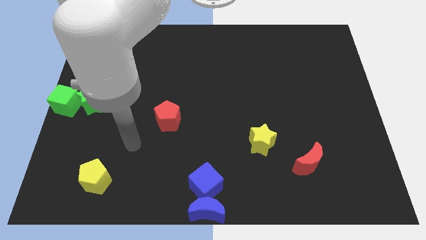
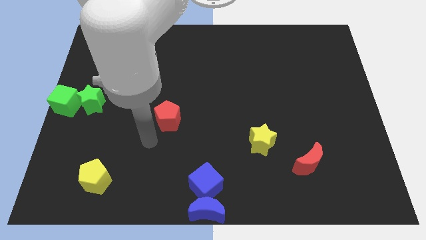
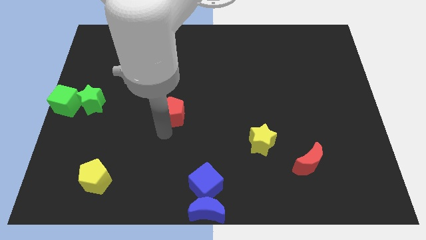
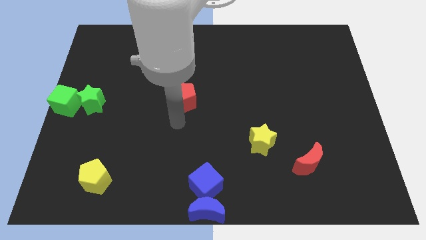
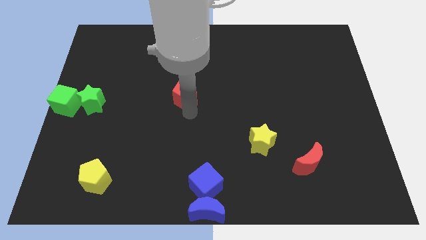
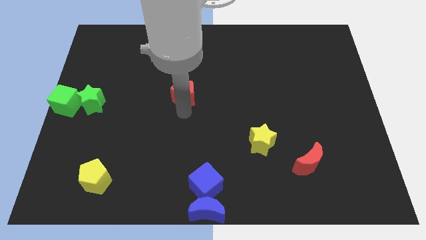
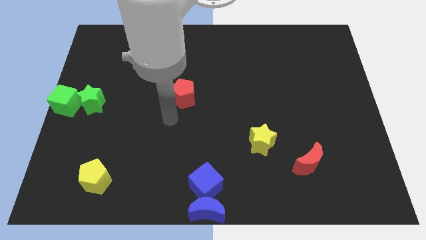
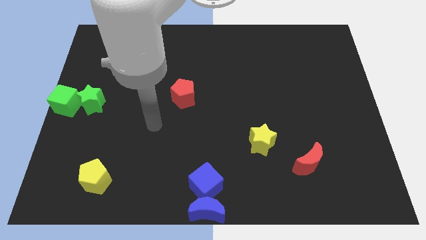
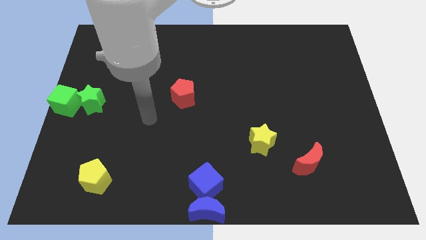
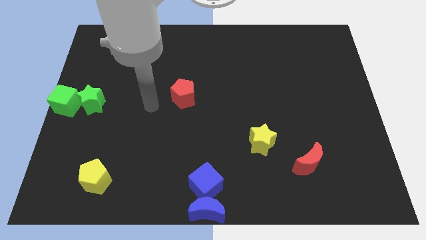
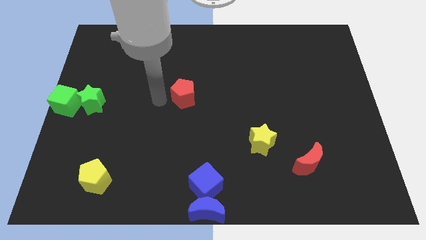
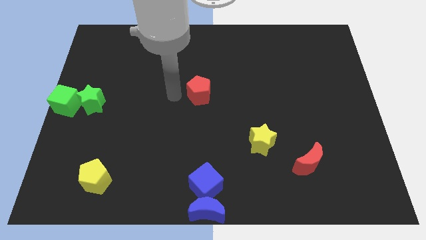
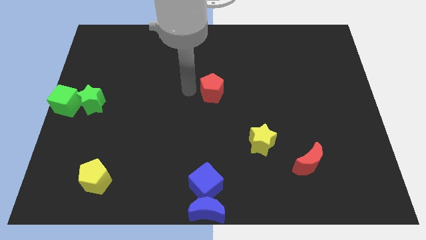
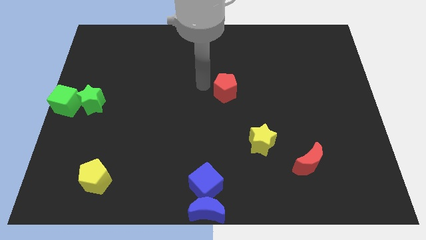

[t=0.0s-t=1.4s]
move the red pentagon to the center of the board

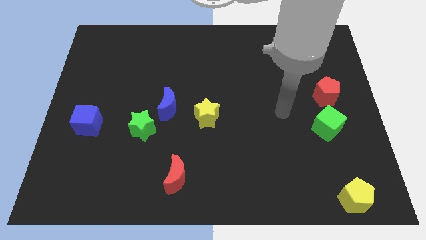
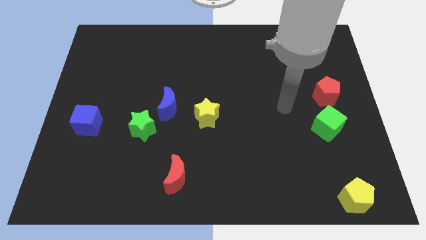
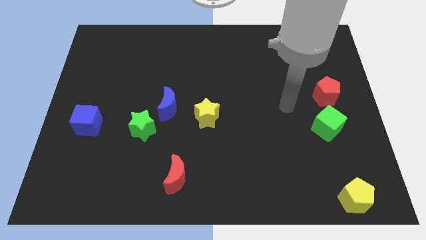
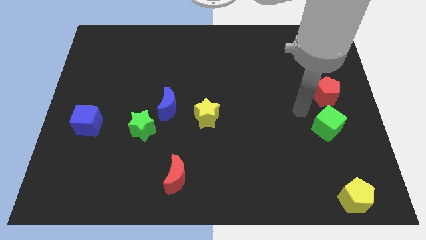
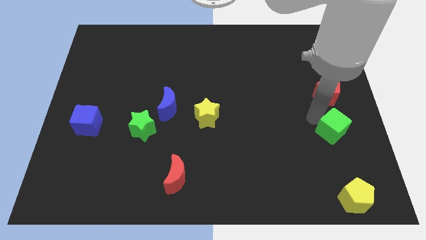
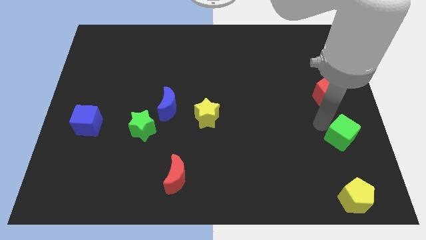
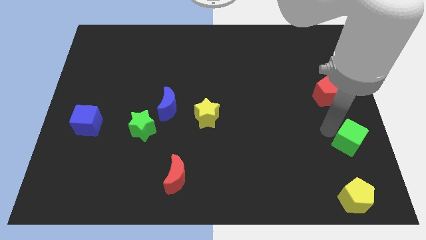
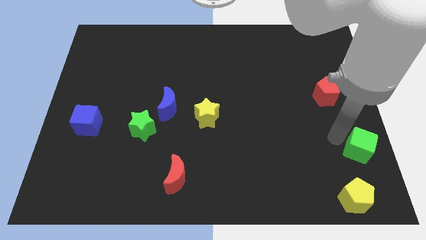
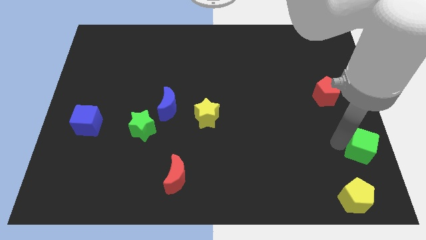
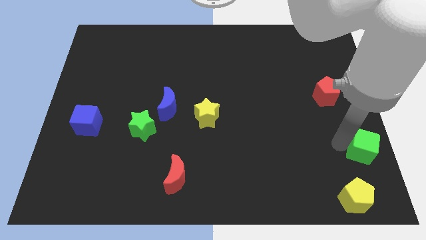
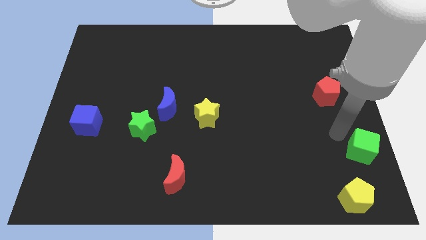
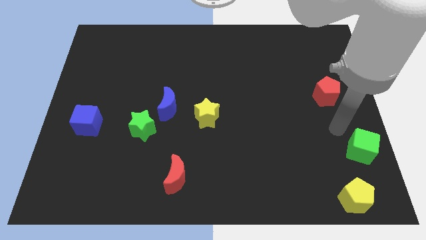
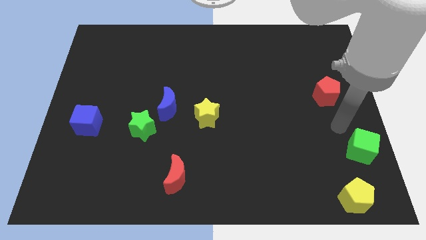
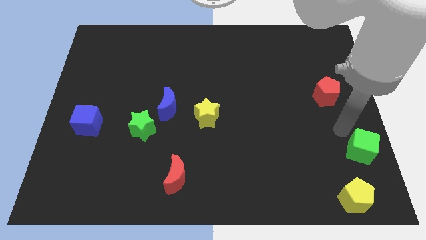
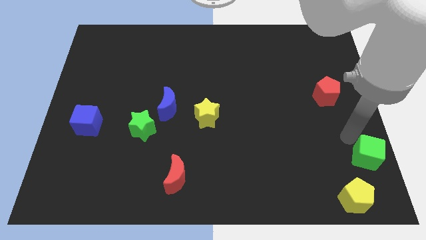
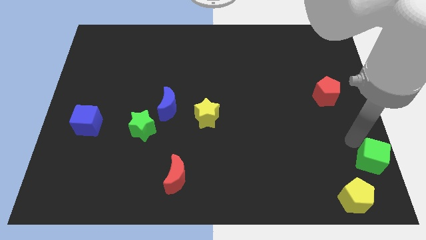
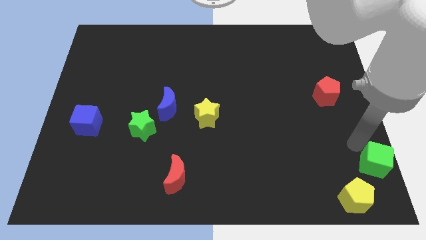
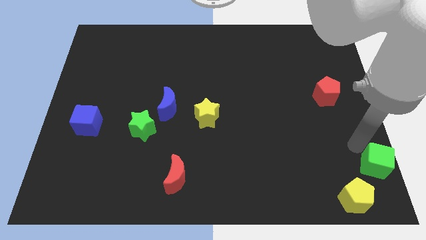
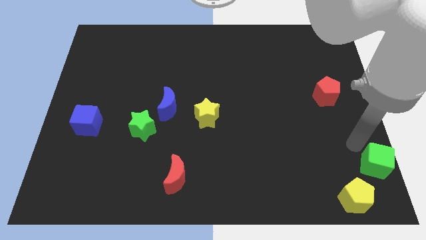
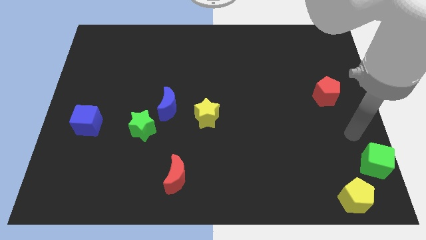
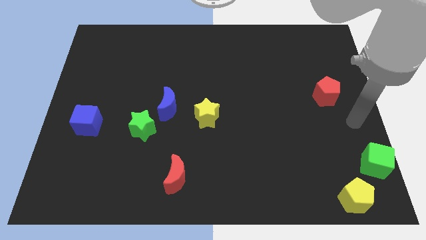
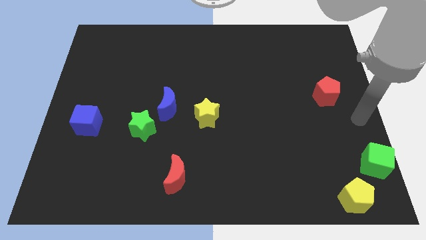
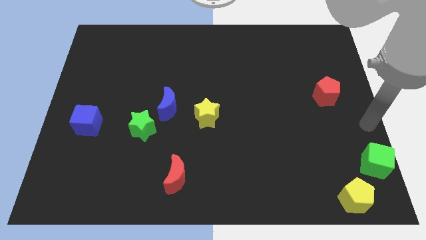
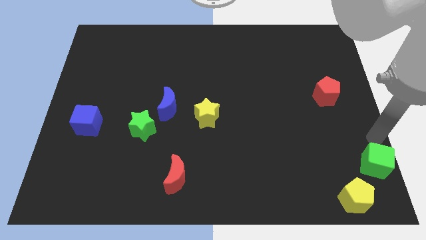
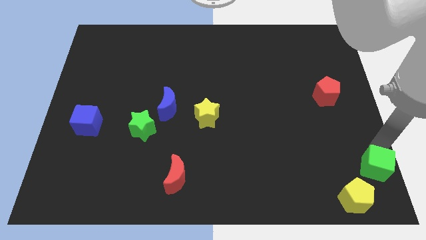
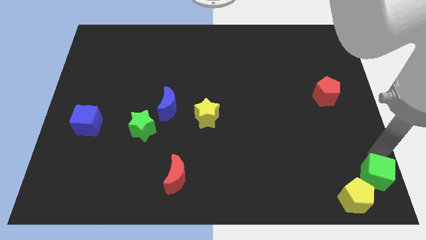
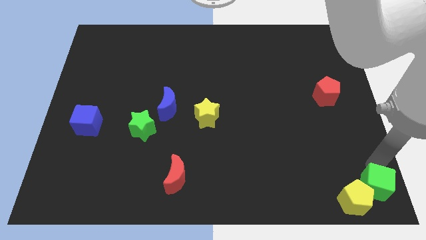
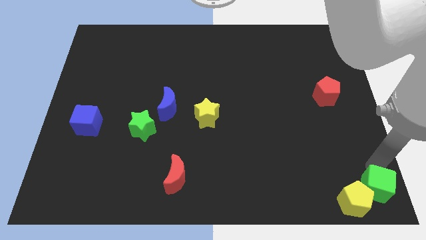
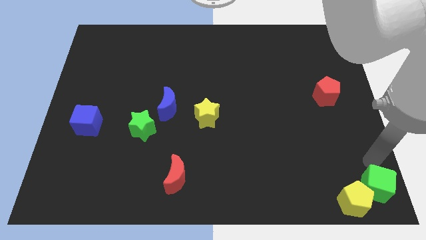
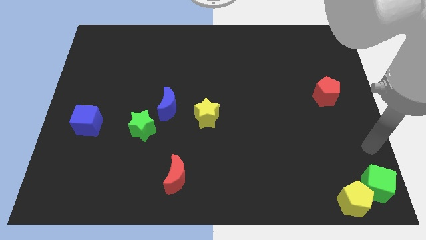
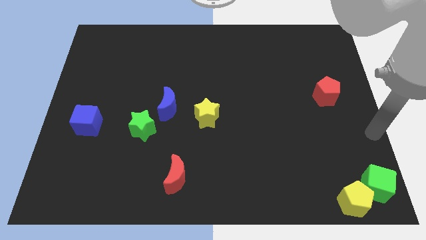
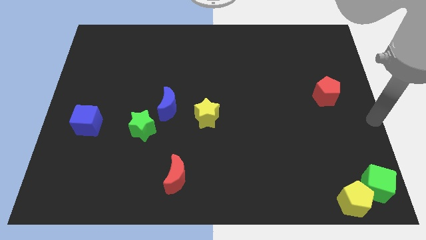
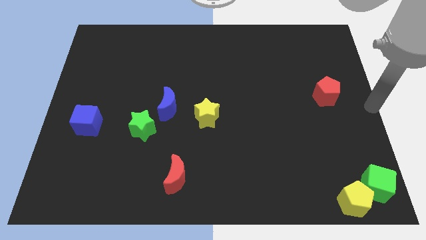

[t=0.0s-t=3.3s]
push the green cube to the bottom right corner of the board

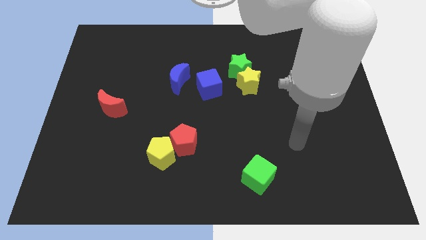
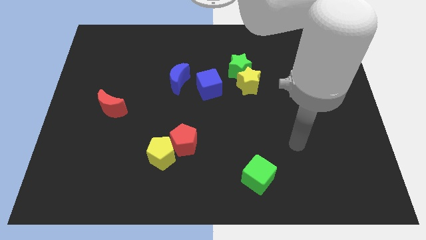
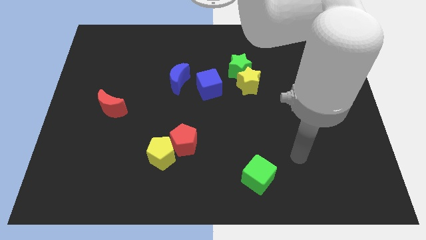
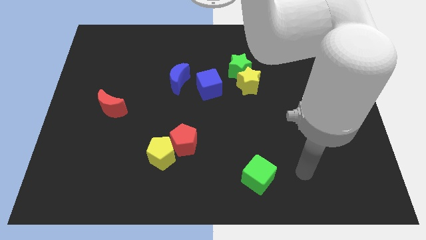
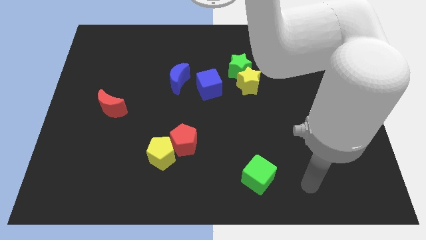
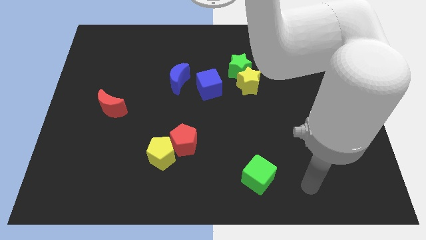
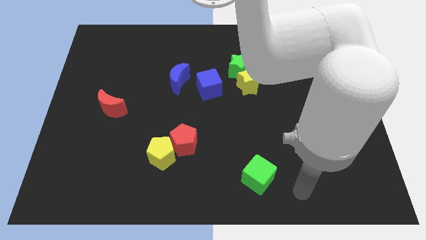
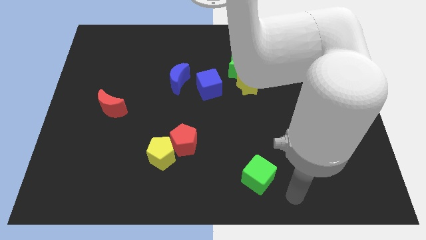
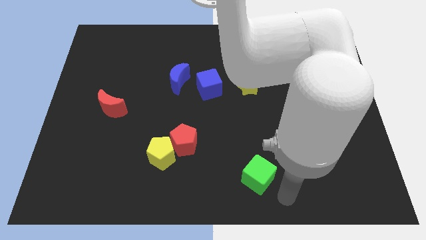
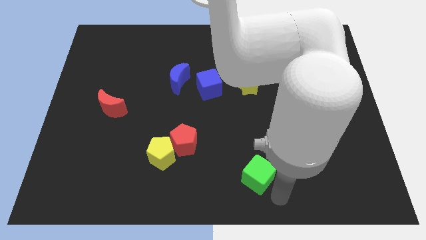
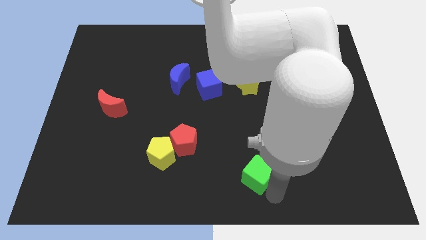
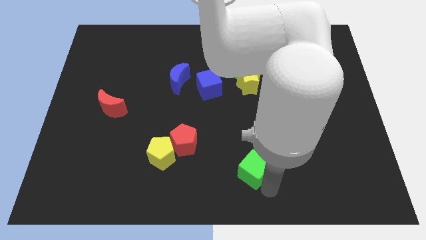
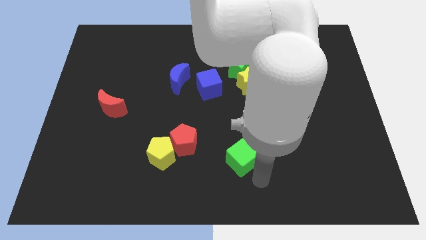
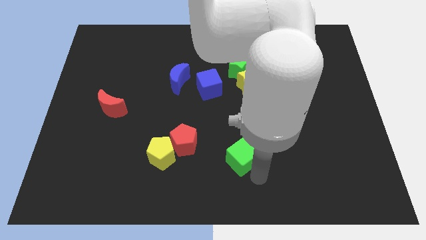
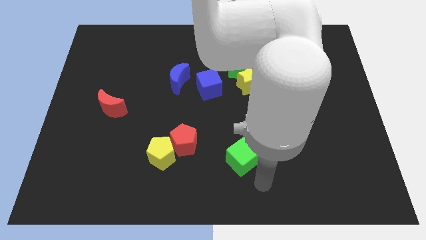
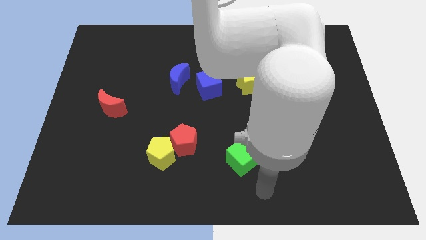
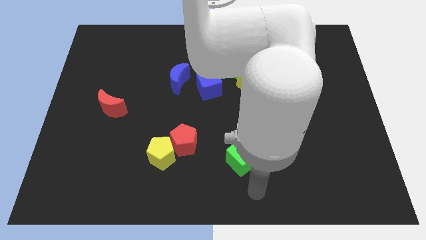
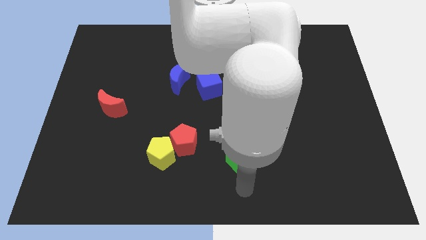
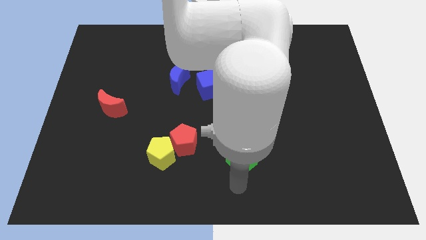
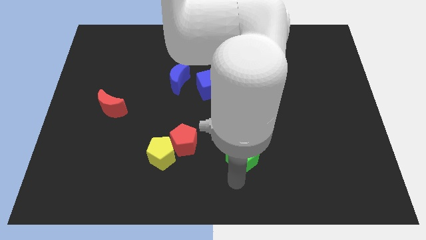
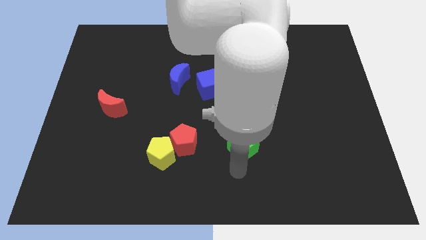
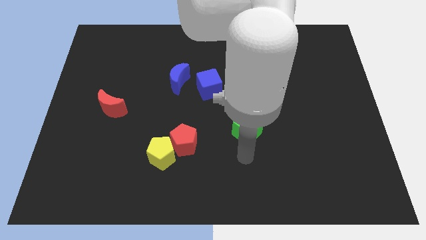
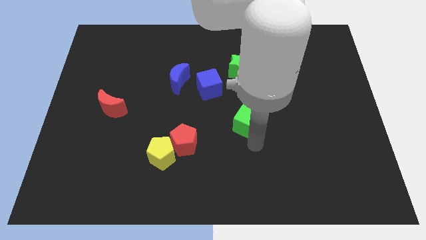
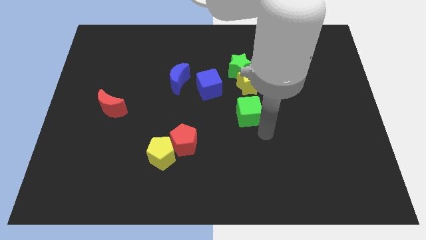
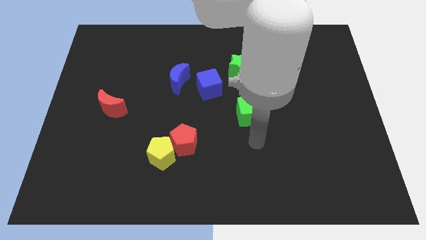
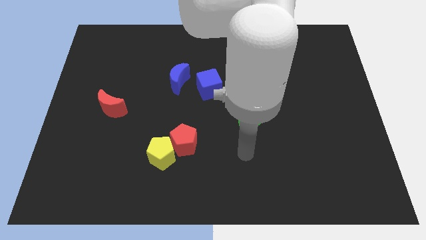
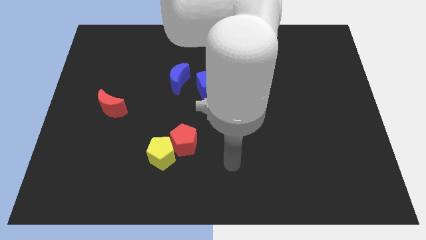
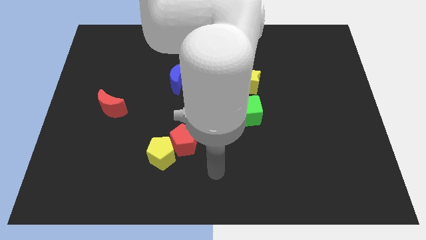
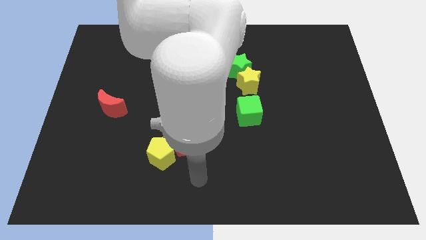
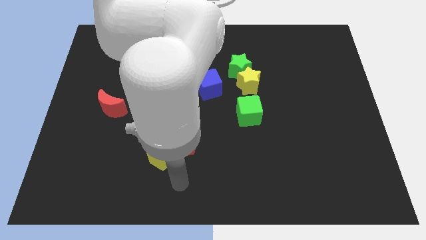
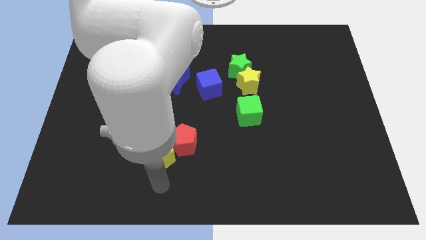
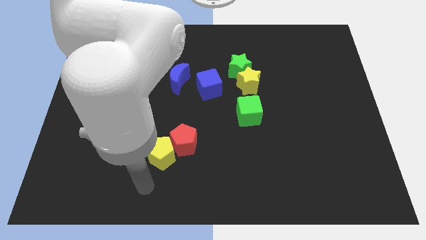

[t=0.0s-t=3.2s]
move the green cube below the yellow star

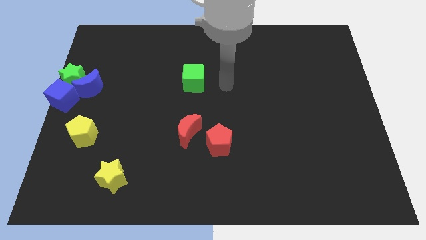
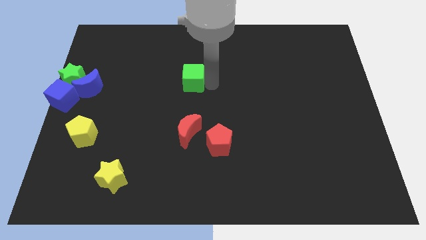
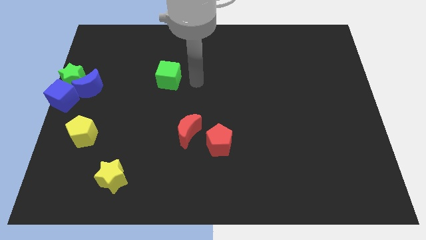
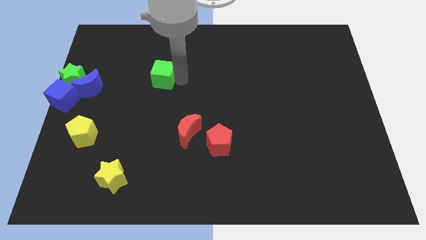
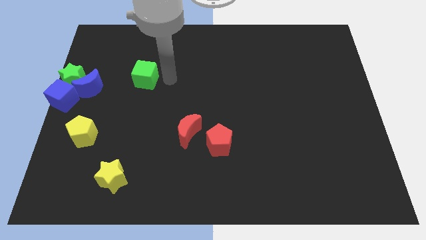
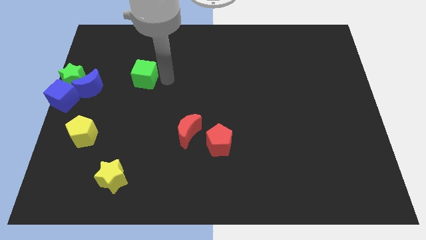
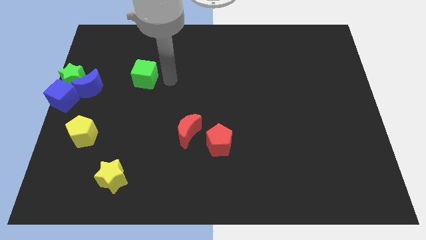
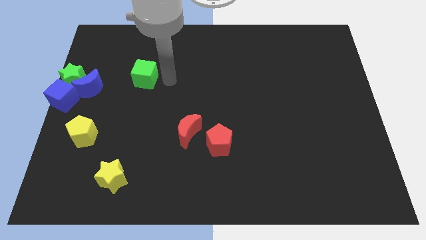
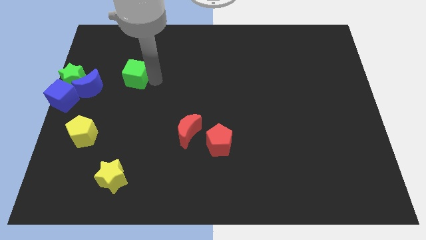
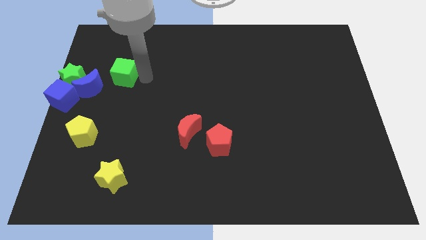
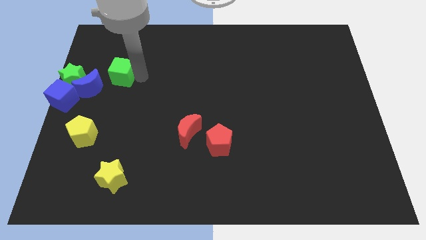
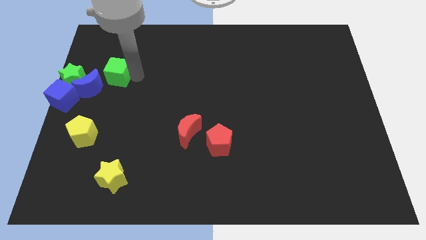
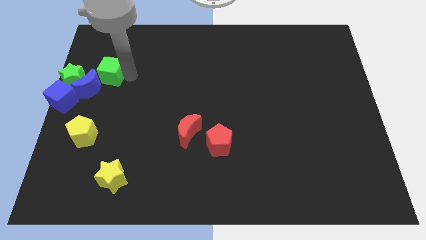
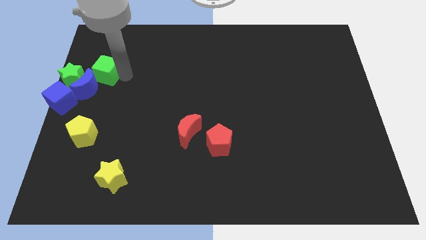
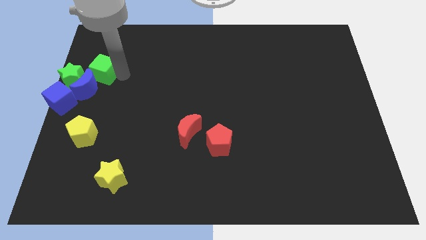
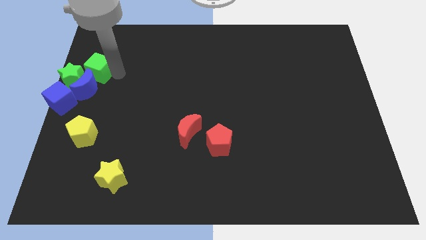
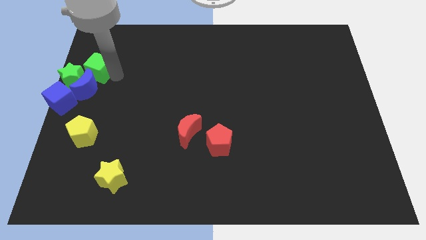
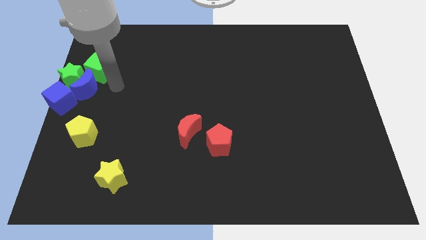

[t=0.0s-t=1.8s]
slide the green cube to the top side of the blue moon
